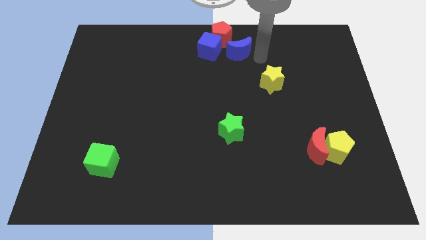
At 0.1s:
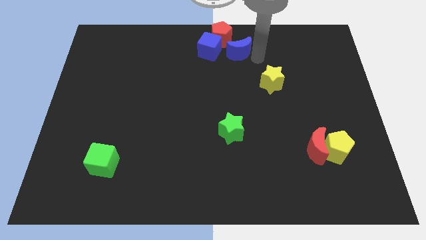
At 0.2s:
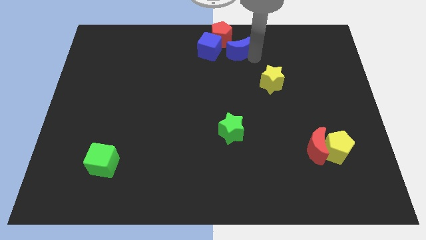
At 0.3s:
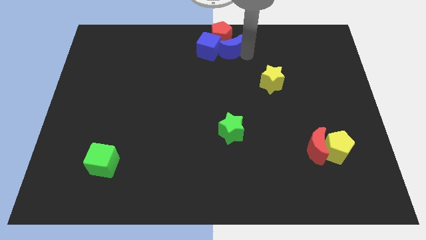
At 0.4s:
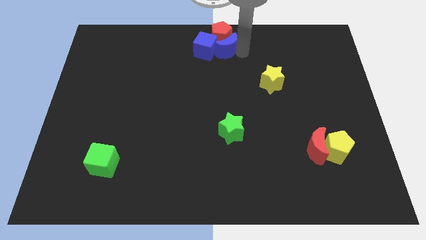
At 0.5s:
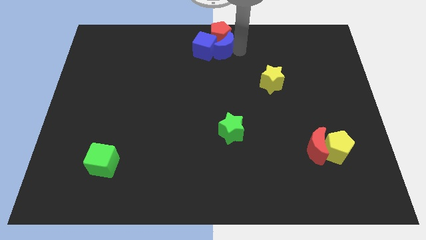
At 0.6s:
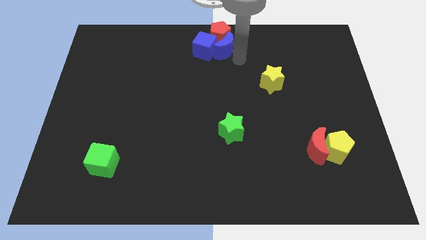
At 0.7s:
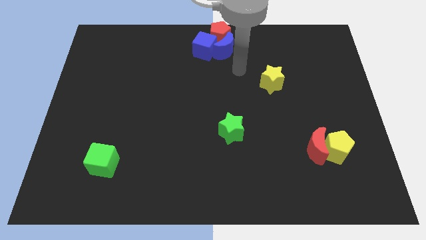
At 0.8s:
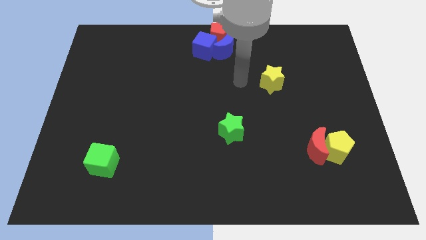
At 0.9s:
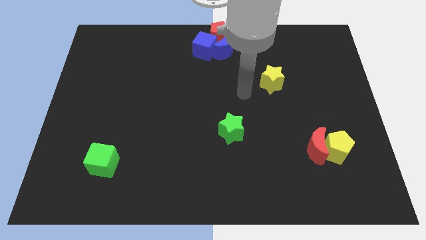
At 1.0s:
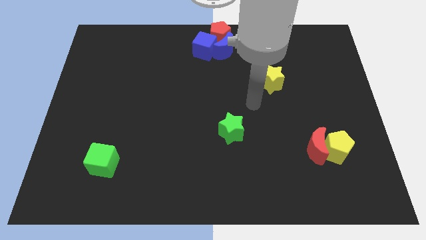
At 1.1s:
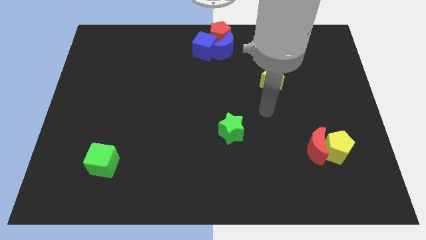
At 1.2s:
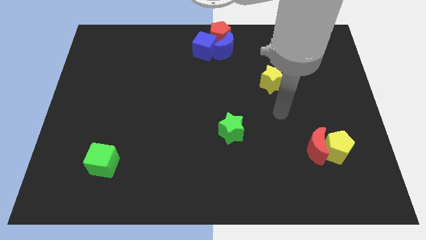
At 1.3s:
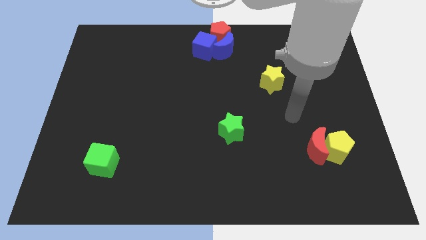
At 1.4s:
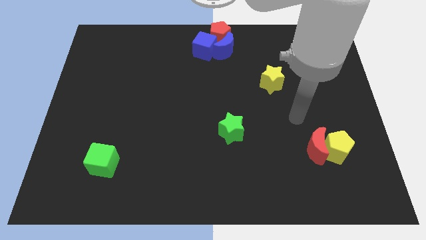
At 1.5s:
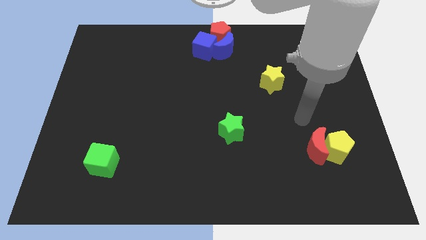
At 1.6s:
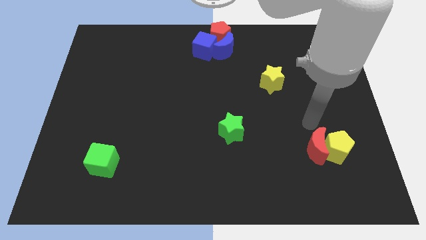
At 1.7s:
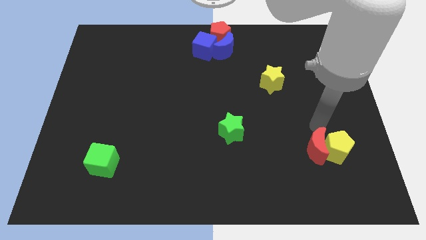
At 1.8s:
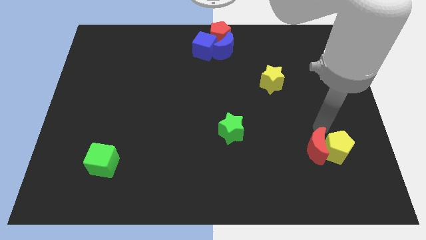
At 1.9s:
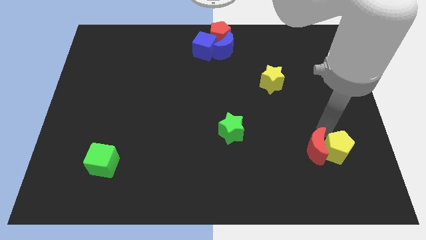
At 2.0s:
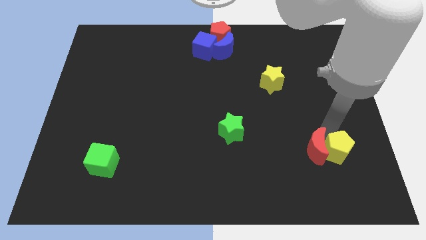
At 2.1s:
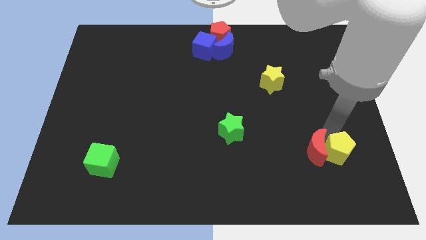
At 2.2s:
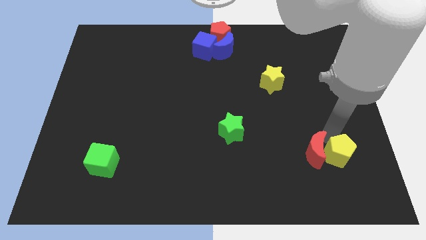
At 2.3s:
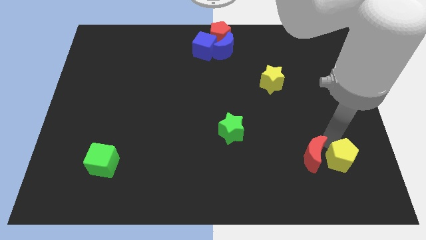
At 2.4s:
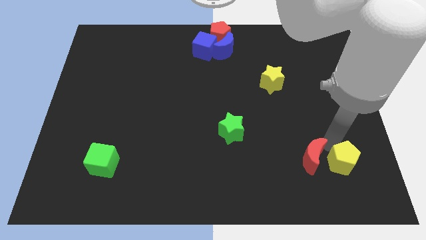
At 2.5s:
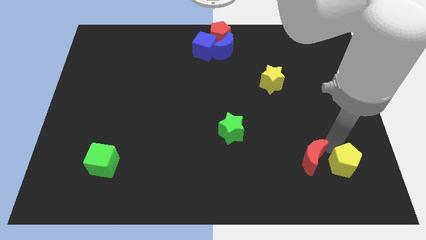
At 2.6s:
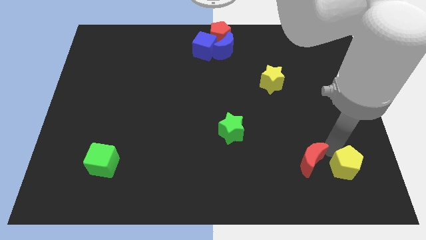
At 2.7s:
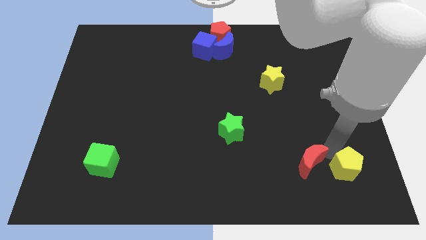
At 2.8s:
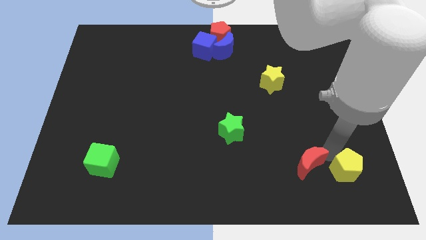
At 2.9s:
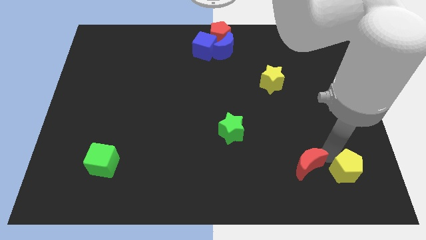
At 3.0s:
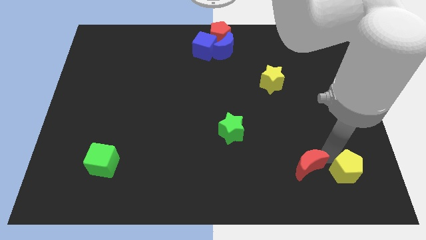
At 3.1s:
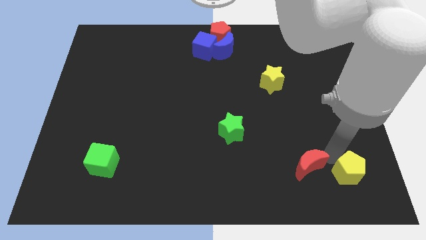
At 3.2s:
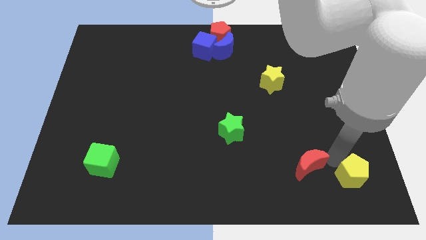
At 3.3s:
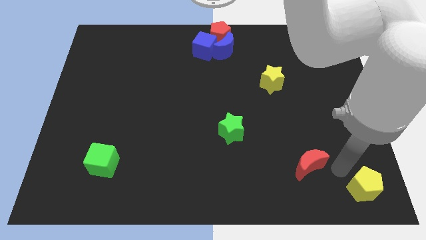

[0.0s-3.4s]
separate red crescent with yellow pentagon

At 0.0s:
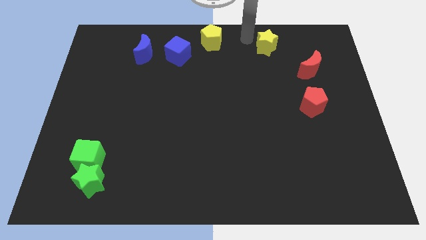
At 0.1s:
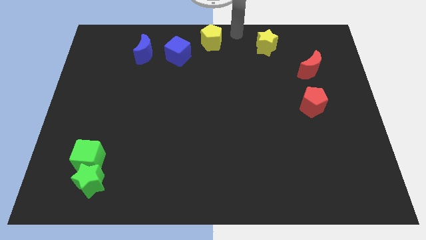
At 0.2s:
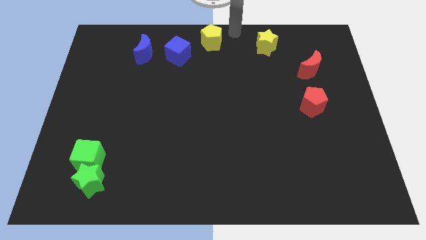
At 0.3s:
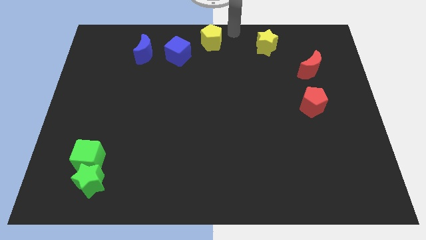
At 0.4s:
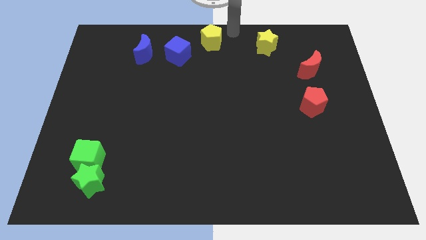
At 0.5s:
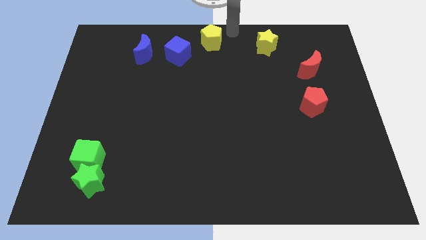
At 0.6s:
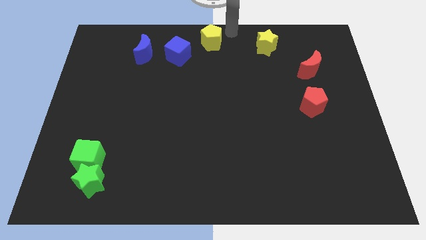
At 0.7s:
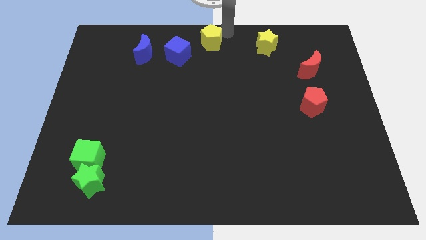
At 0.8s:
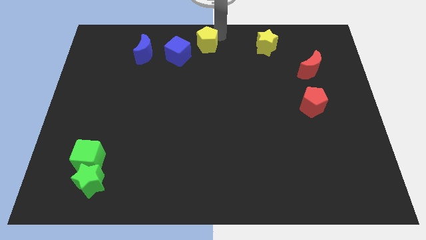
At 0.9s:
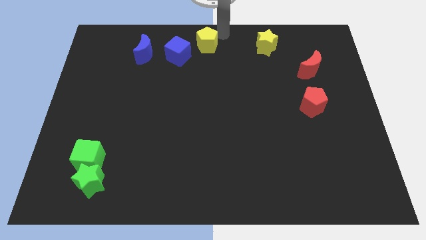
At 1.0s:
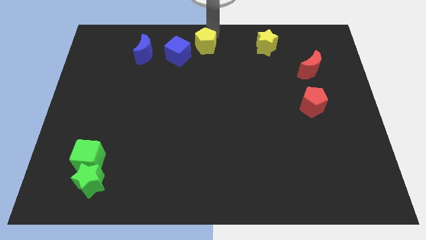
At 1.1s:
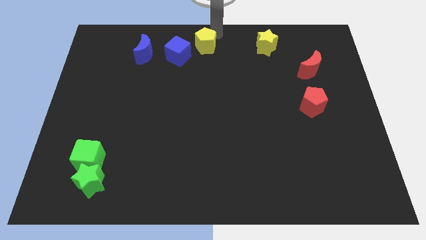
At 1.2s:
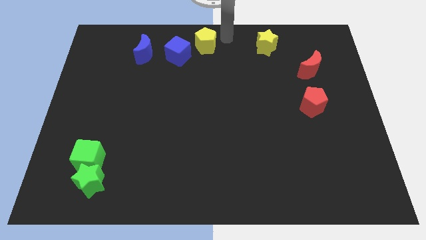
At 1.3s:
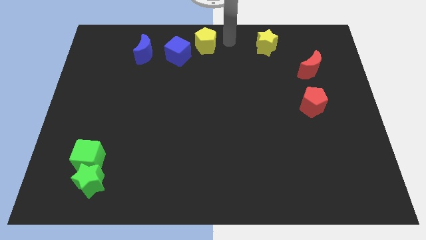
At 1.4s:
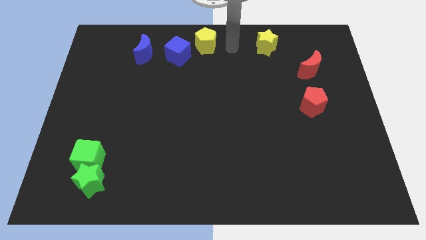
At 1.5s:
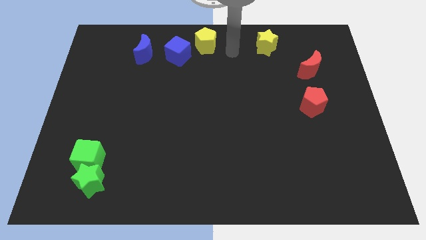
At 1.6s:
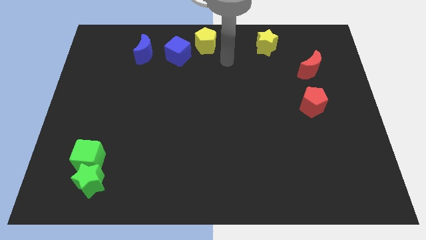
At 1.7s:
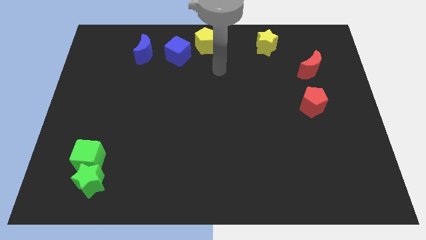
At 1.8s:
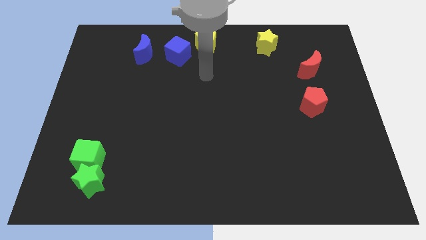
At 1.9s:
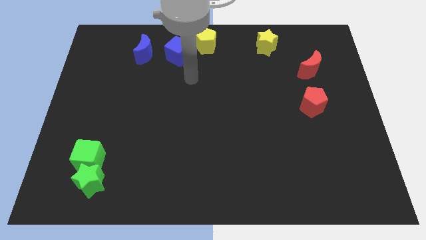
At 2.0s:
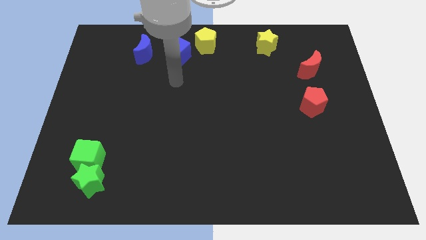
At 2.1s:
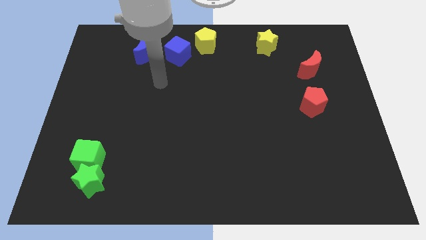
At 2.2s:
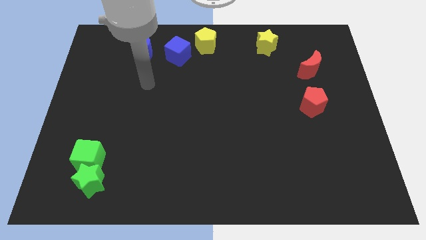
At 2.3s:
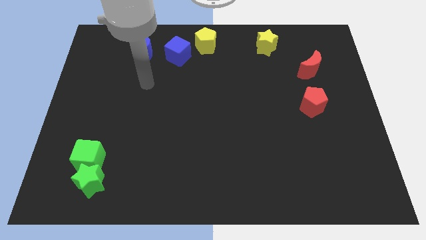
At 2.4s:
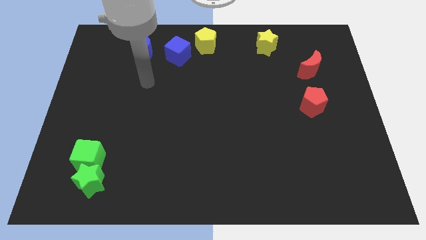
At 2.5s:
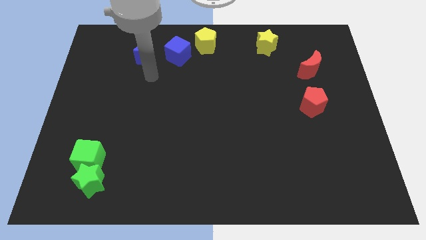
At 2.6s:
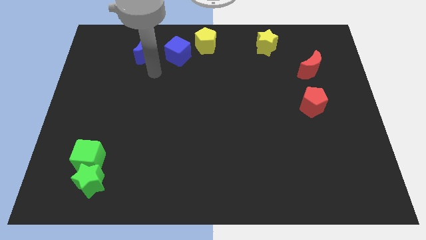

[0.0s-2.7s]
move the yellow pentagon to the top right of the blue cube

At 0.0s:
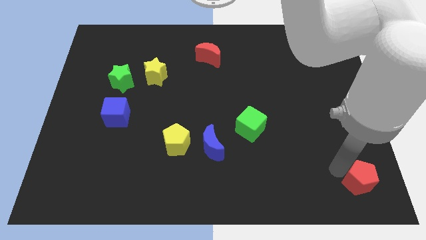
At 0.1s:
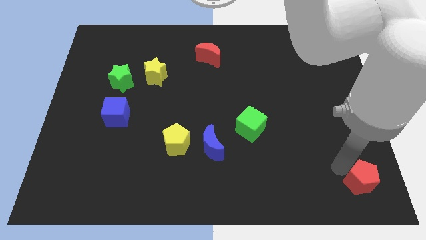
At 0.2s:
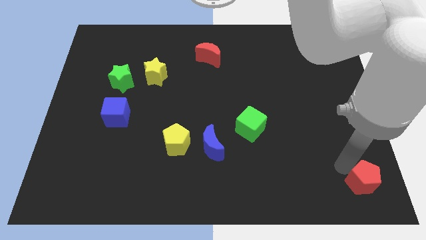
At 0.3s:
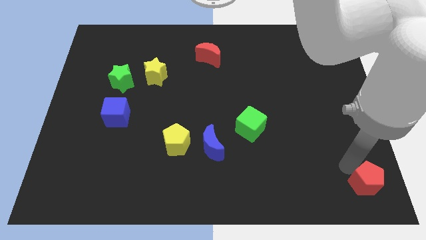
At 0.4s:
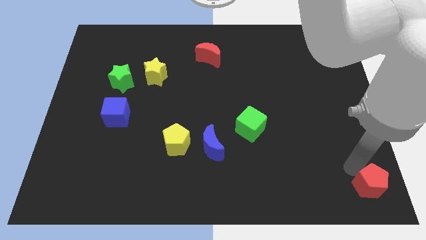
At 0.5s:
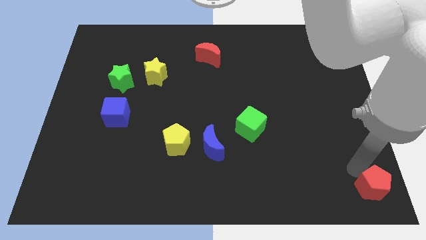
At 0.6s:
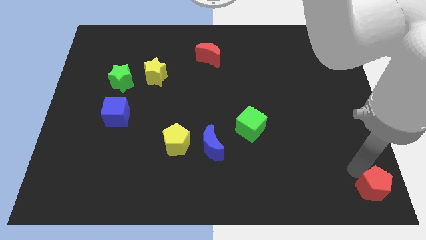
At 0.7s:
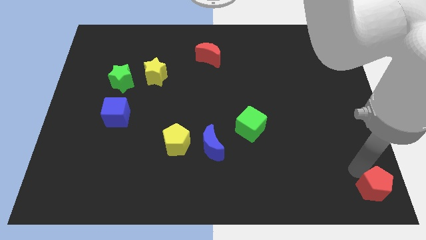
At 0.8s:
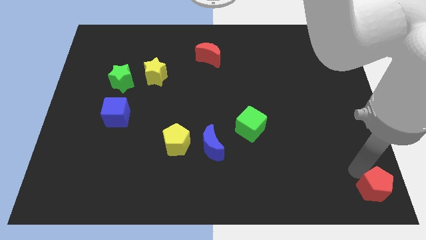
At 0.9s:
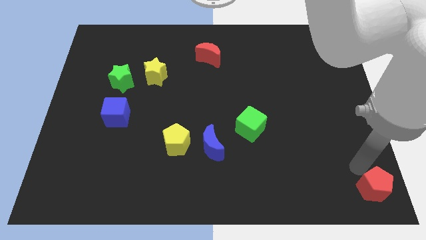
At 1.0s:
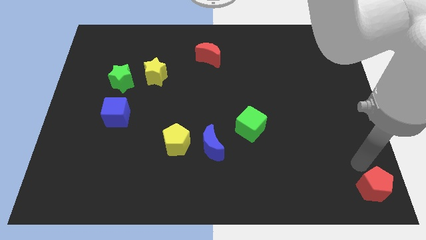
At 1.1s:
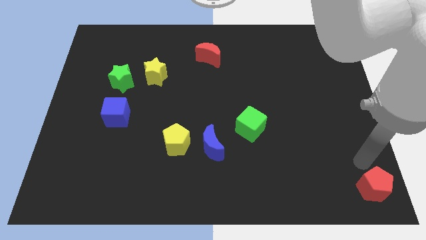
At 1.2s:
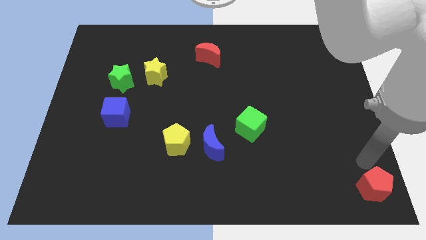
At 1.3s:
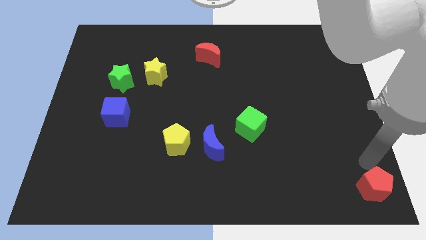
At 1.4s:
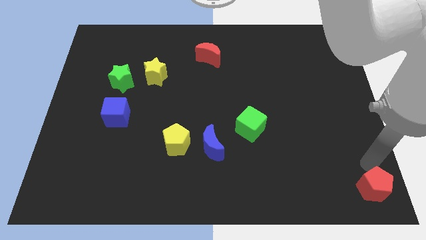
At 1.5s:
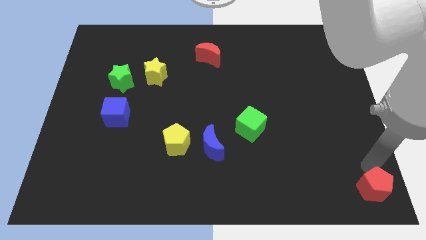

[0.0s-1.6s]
move the red pentagon slightly to the right bottom of the board

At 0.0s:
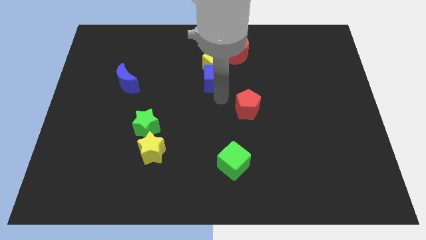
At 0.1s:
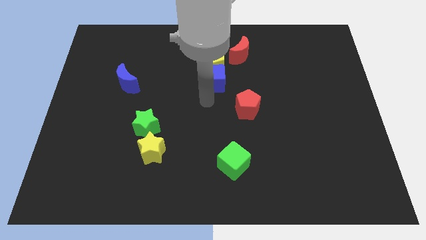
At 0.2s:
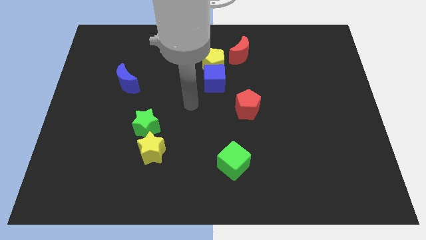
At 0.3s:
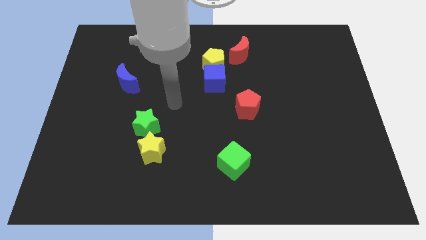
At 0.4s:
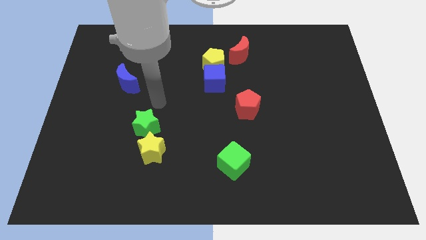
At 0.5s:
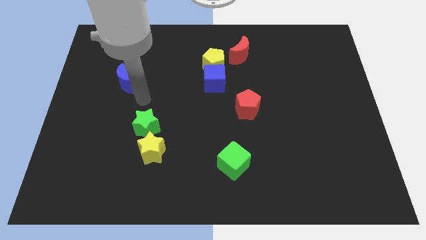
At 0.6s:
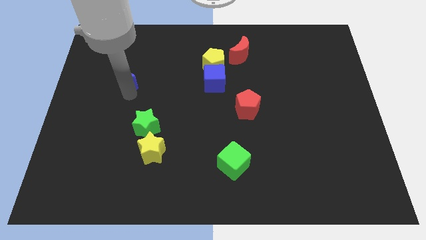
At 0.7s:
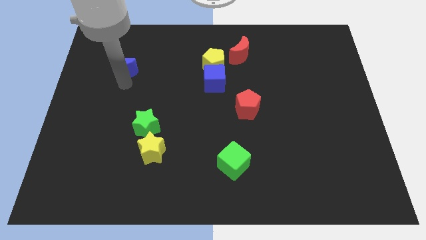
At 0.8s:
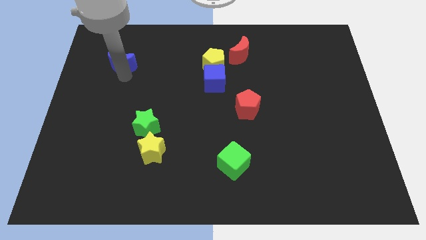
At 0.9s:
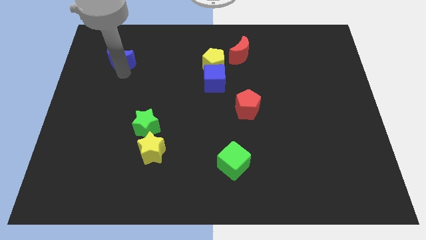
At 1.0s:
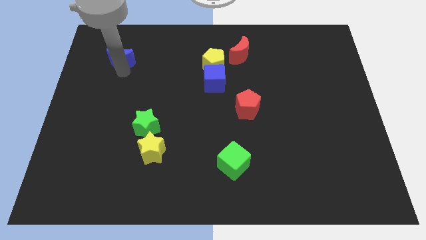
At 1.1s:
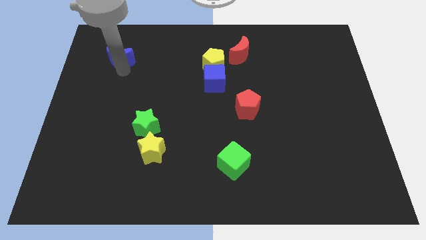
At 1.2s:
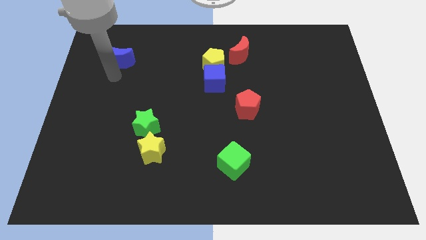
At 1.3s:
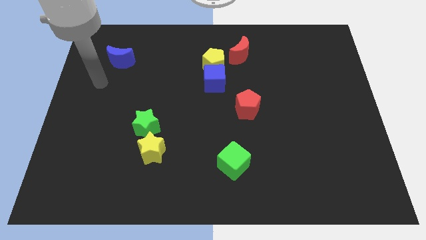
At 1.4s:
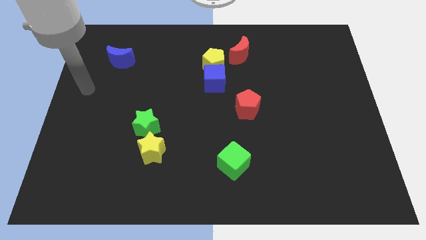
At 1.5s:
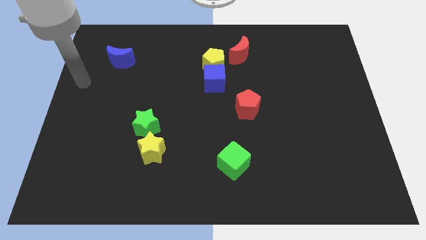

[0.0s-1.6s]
push the blue moon upwards
